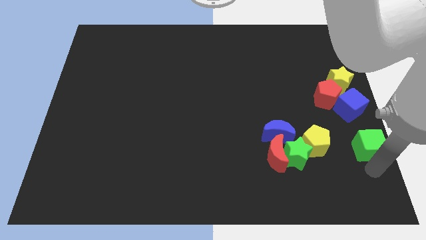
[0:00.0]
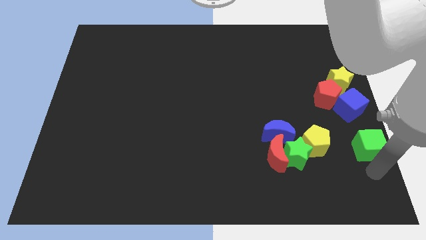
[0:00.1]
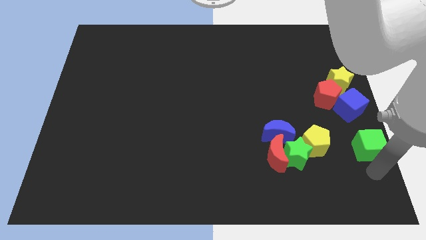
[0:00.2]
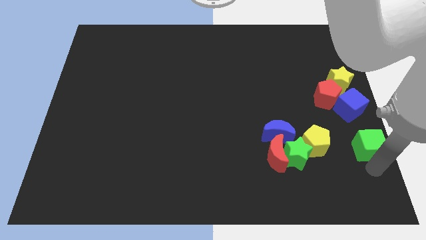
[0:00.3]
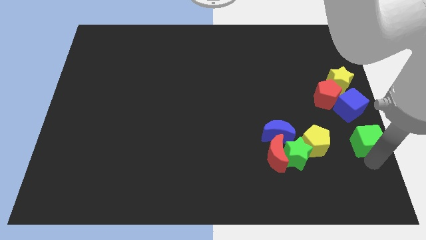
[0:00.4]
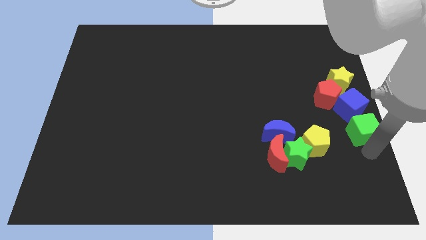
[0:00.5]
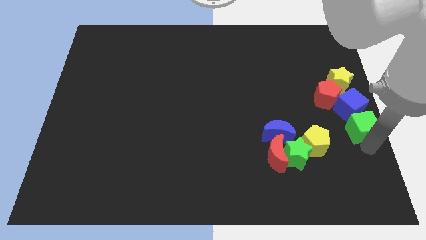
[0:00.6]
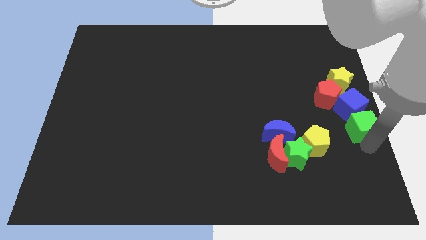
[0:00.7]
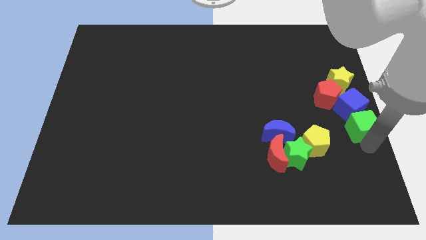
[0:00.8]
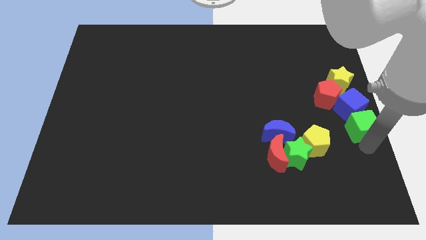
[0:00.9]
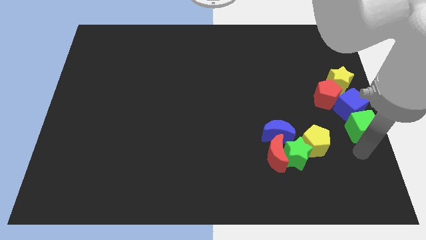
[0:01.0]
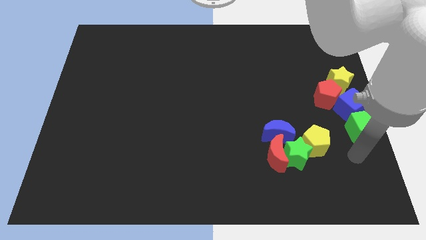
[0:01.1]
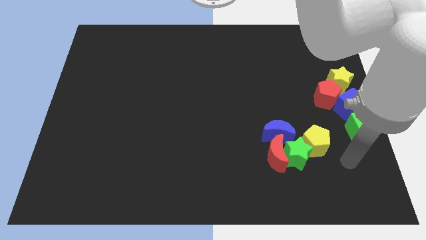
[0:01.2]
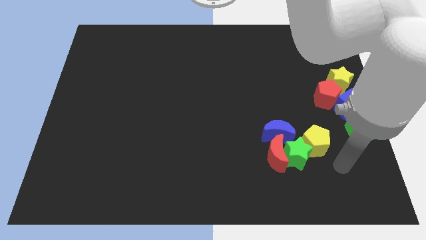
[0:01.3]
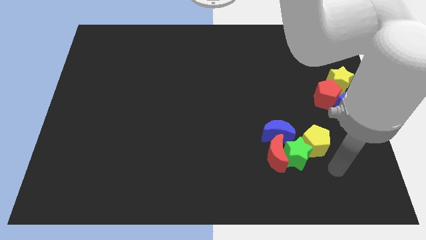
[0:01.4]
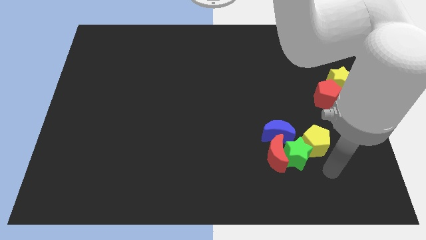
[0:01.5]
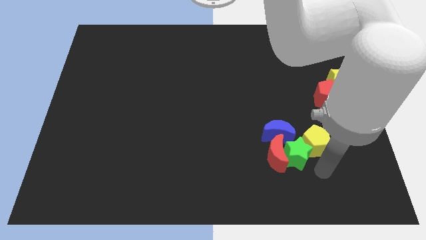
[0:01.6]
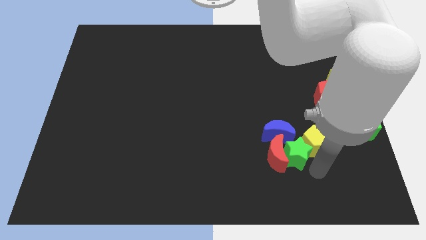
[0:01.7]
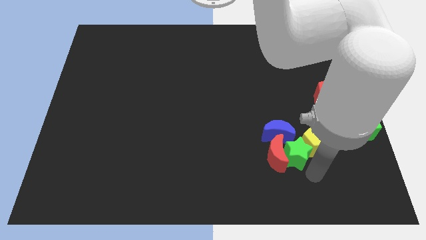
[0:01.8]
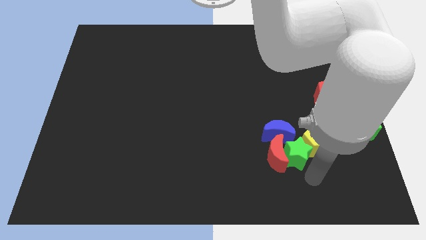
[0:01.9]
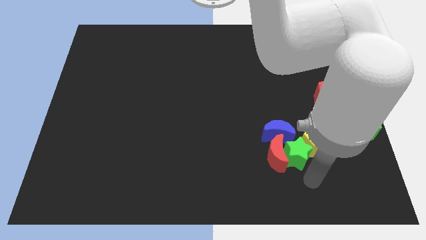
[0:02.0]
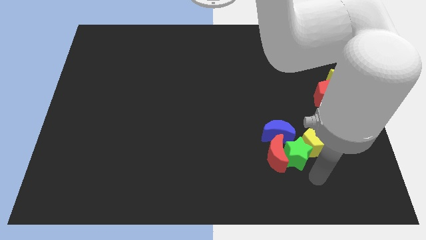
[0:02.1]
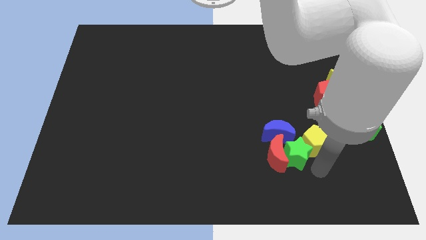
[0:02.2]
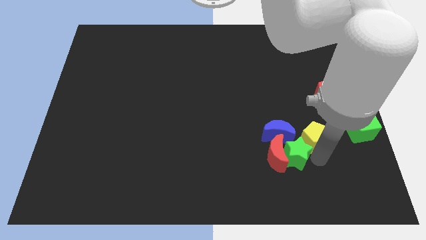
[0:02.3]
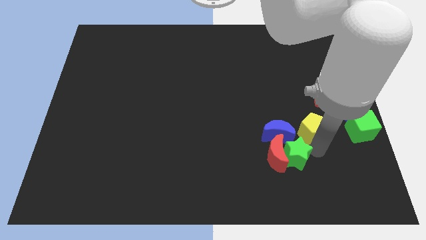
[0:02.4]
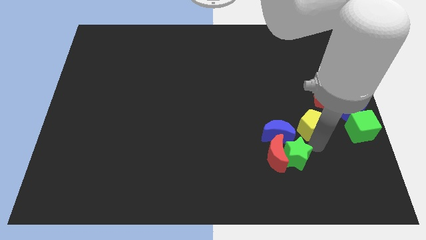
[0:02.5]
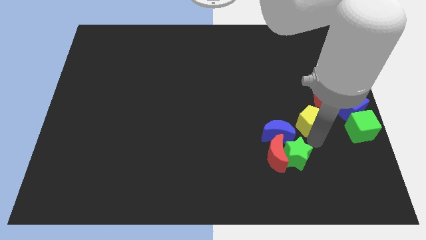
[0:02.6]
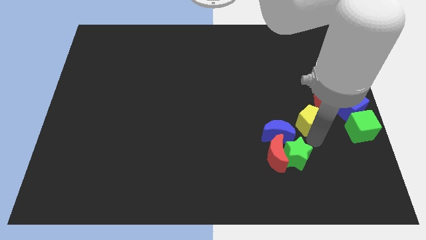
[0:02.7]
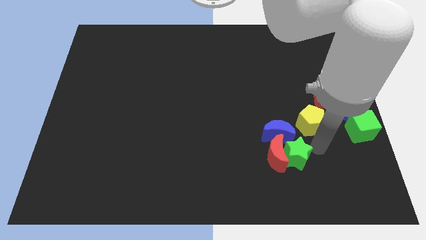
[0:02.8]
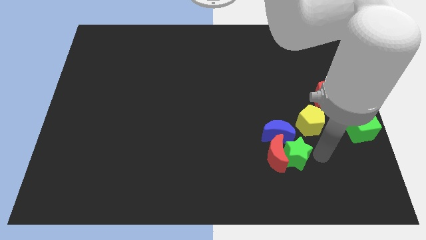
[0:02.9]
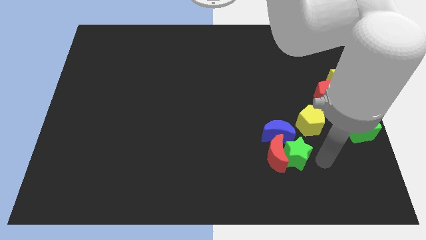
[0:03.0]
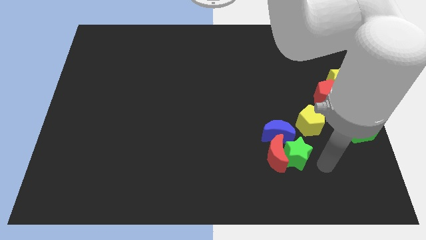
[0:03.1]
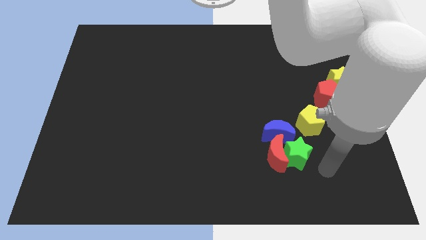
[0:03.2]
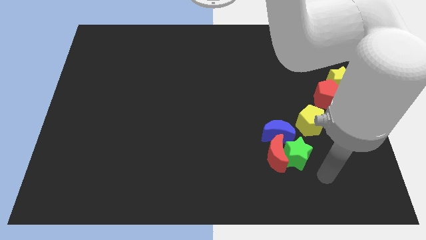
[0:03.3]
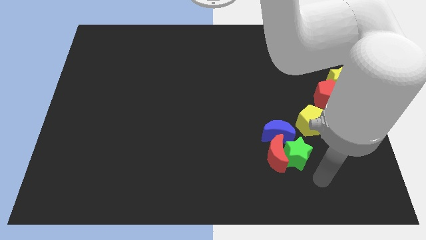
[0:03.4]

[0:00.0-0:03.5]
place the yellow pentagon diagonal to bottom of the red pentagon

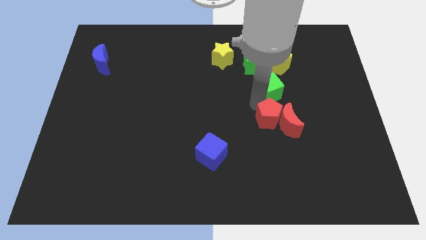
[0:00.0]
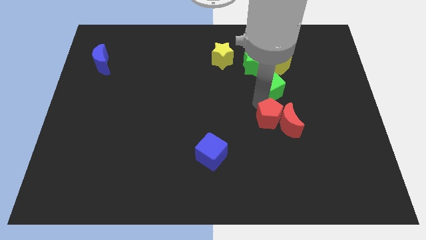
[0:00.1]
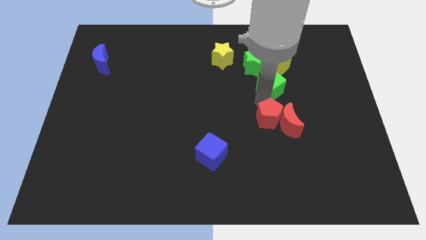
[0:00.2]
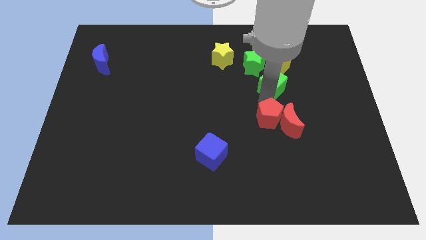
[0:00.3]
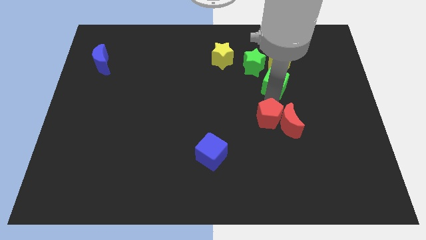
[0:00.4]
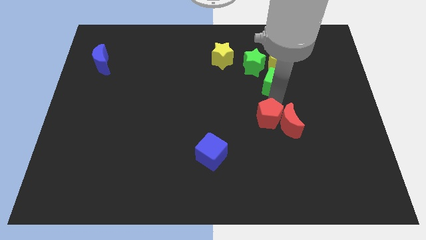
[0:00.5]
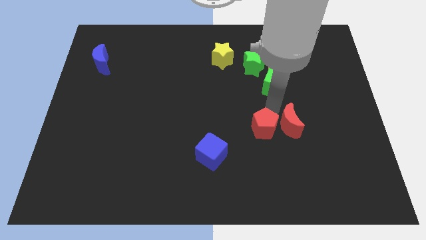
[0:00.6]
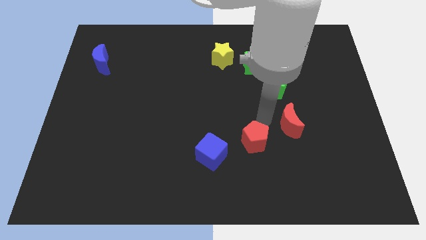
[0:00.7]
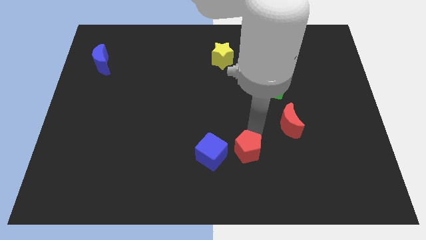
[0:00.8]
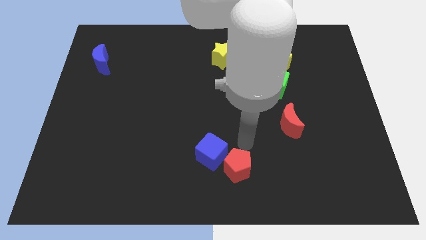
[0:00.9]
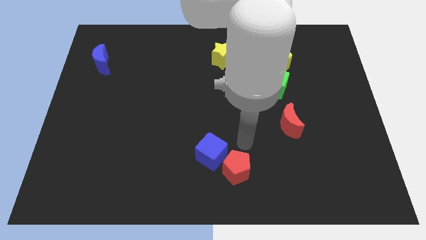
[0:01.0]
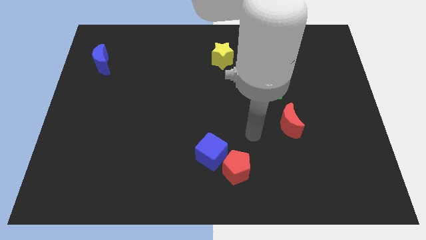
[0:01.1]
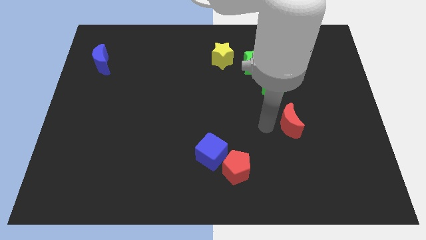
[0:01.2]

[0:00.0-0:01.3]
separate the red pentagon from red crescent

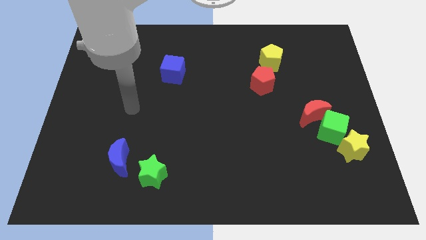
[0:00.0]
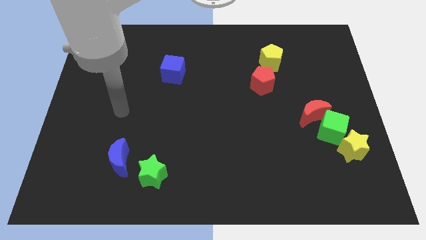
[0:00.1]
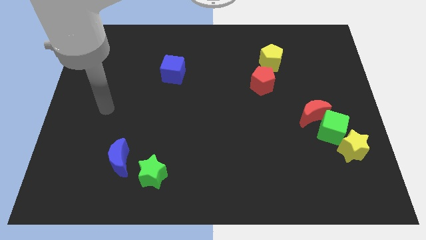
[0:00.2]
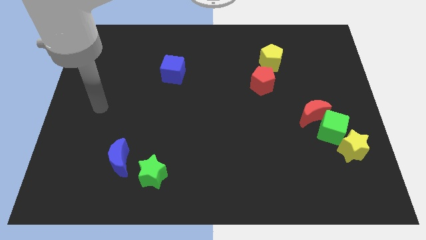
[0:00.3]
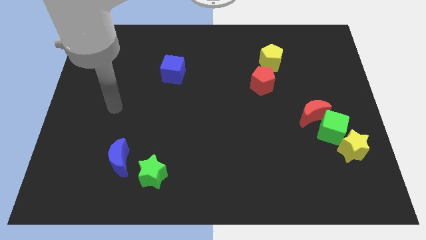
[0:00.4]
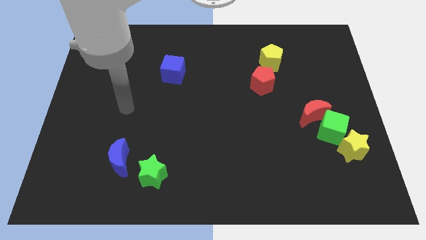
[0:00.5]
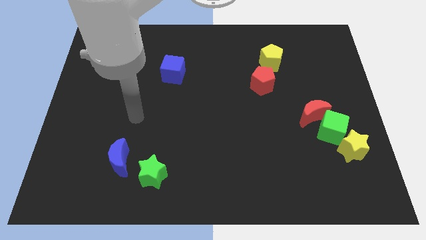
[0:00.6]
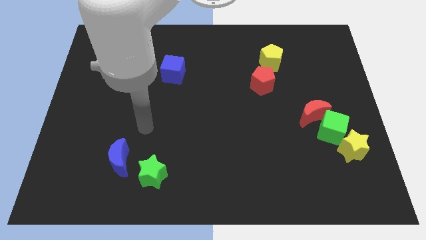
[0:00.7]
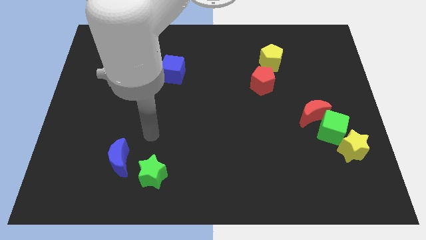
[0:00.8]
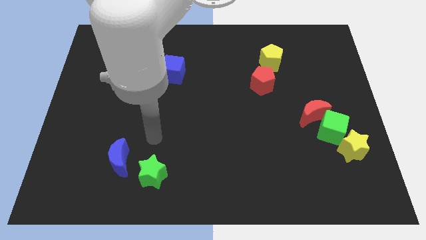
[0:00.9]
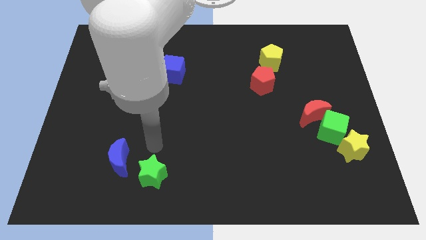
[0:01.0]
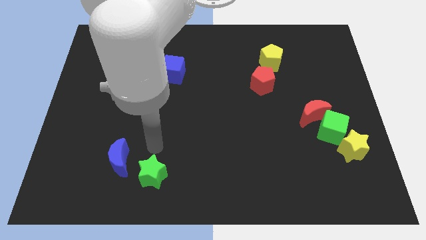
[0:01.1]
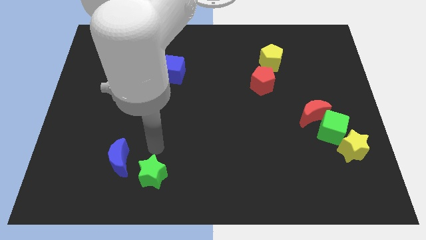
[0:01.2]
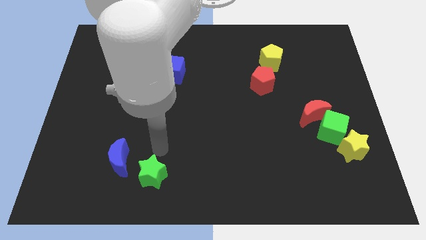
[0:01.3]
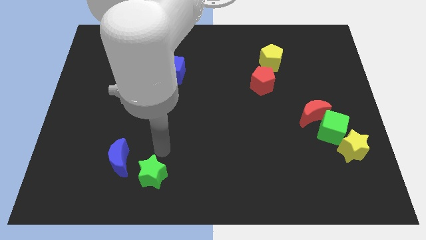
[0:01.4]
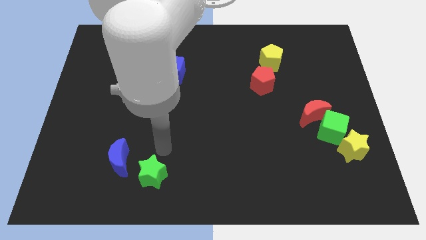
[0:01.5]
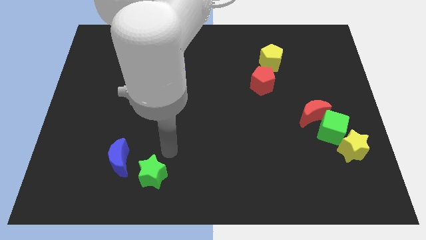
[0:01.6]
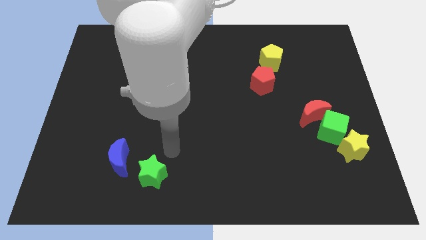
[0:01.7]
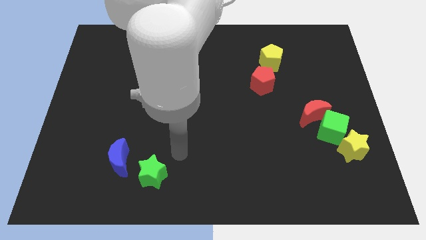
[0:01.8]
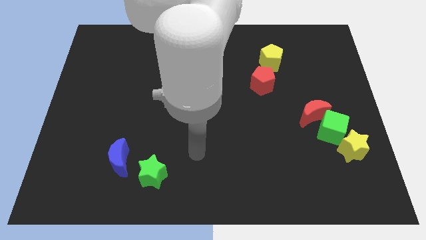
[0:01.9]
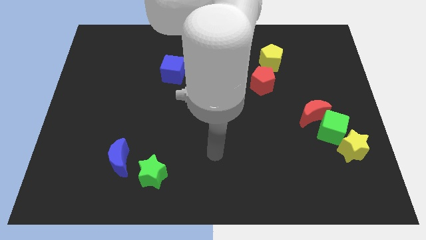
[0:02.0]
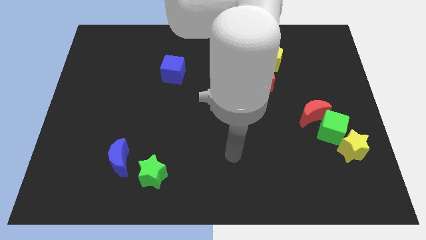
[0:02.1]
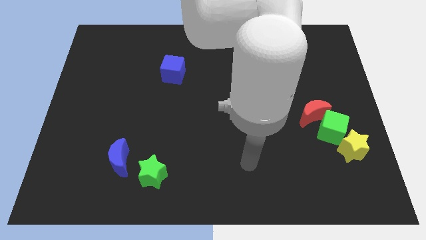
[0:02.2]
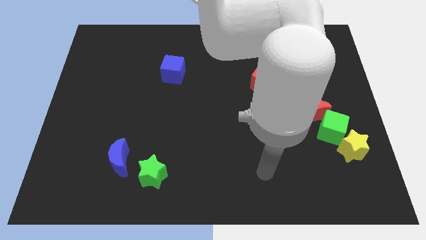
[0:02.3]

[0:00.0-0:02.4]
move your hand towards the bottom right

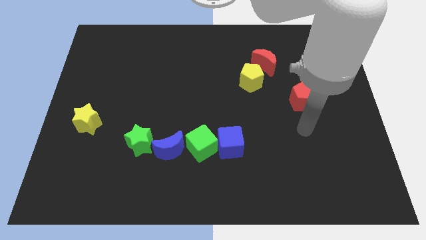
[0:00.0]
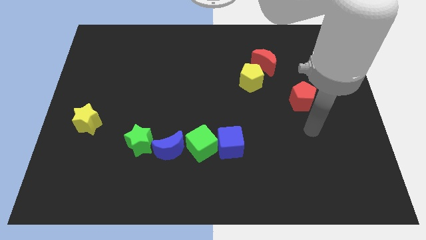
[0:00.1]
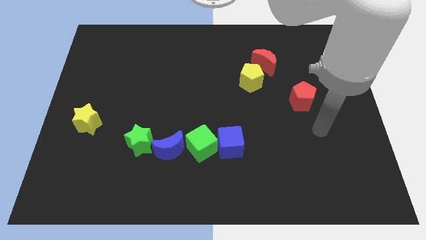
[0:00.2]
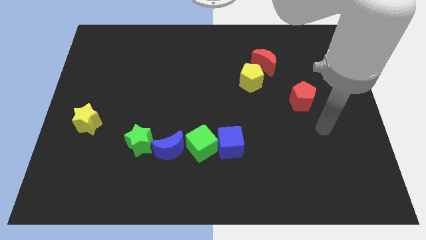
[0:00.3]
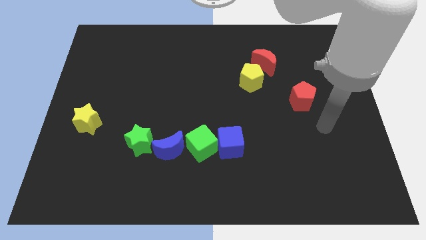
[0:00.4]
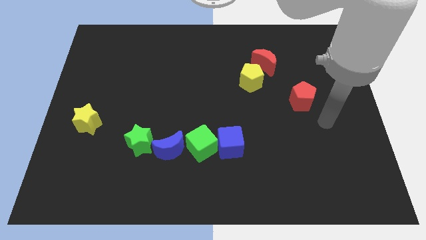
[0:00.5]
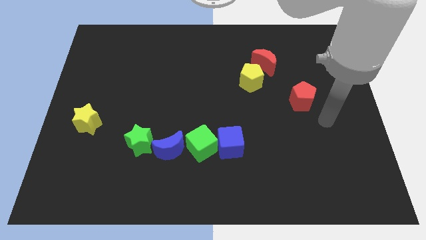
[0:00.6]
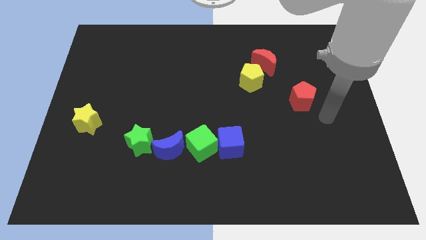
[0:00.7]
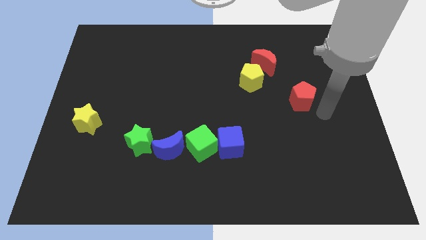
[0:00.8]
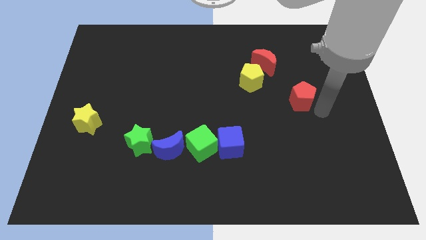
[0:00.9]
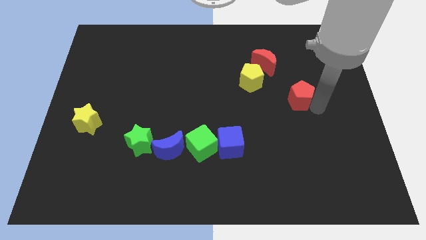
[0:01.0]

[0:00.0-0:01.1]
point your arm right to red pentagon

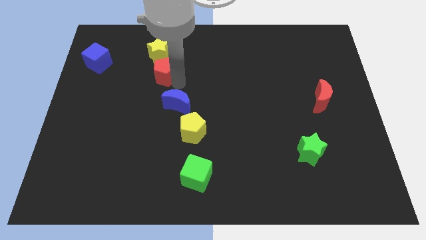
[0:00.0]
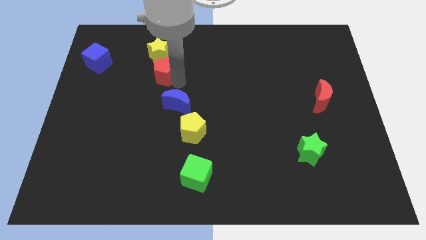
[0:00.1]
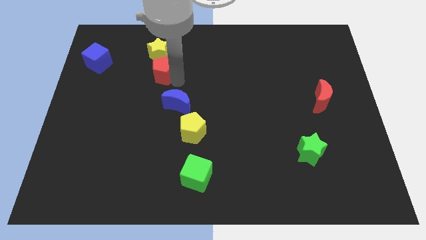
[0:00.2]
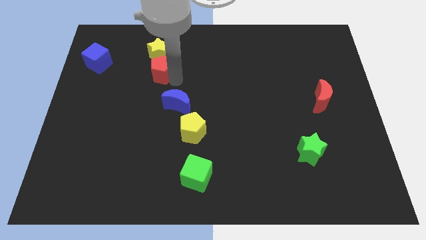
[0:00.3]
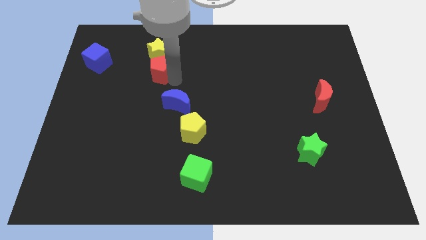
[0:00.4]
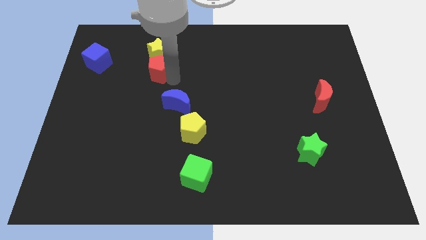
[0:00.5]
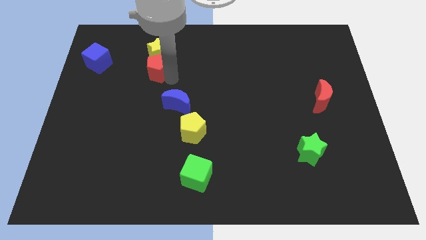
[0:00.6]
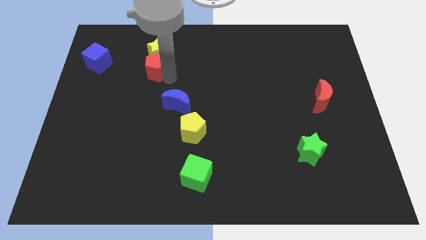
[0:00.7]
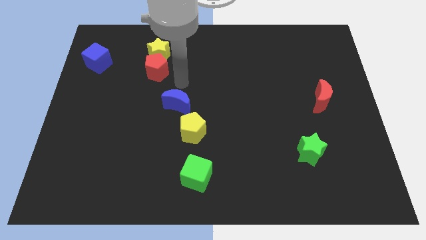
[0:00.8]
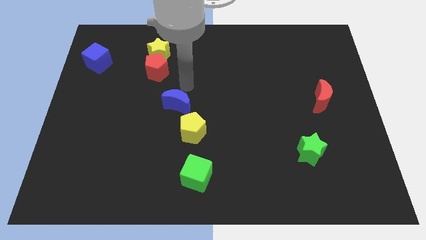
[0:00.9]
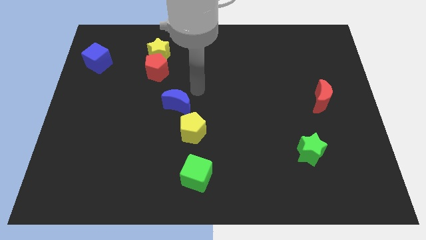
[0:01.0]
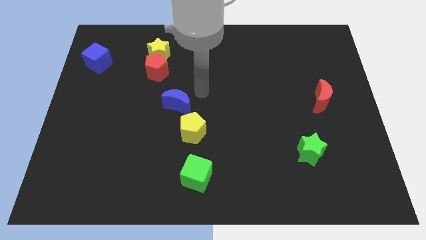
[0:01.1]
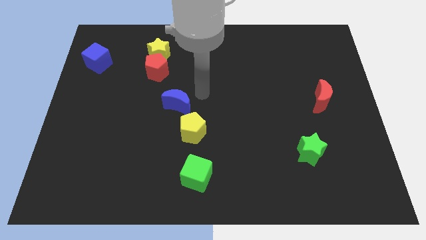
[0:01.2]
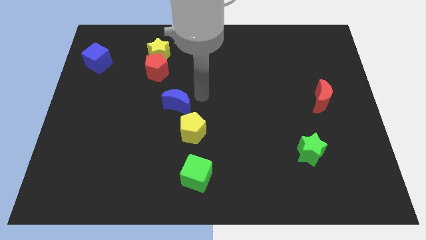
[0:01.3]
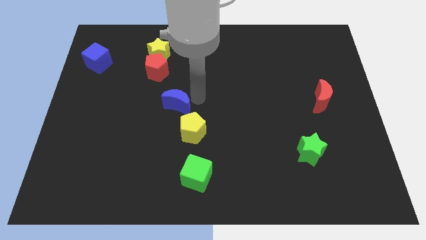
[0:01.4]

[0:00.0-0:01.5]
push red pentagon slightly up
